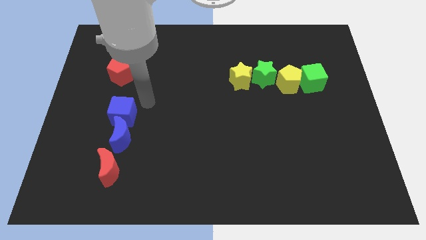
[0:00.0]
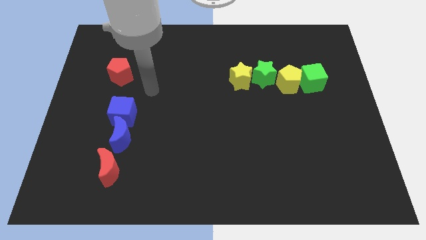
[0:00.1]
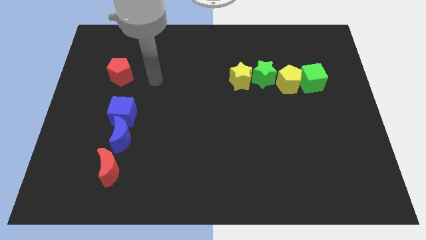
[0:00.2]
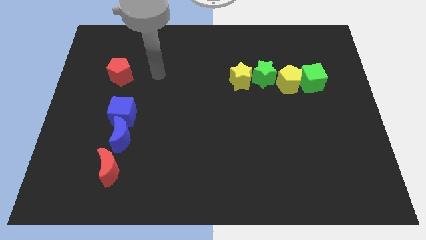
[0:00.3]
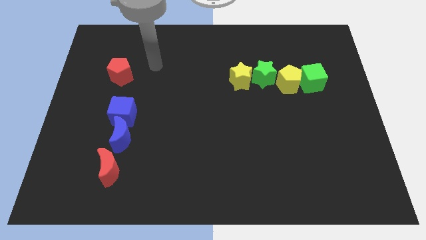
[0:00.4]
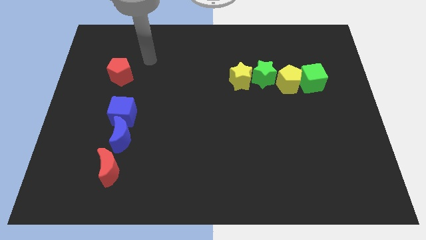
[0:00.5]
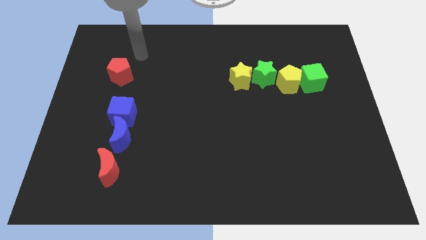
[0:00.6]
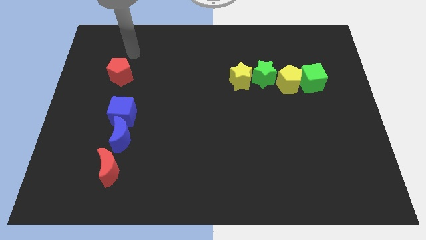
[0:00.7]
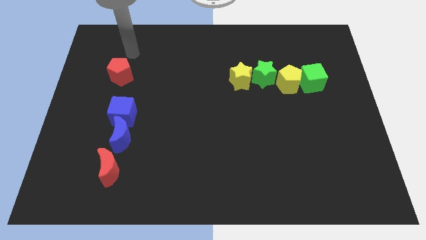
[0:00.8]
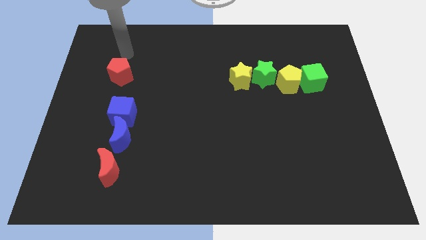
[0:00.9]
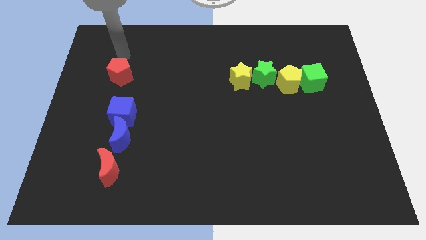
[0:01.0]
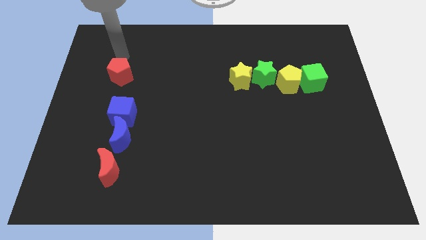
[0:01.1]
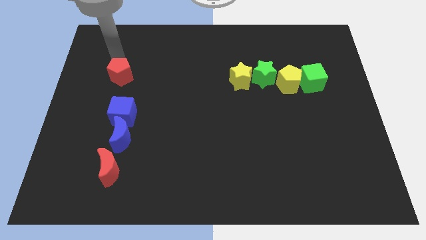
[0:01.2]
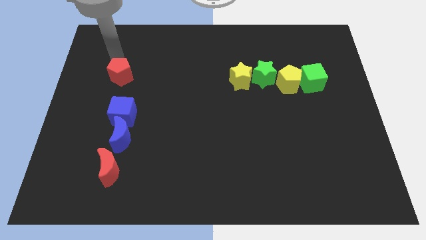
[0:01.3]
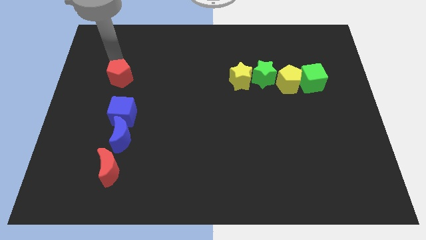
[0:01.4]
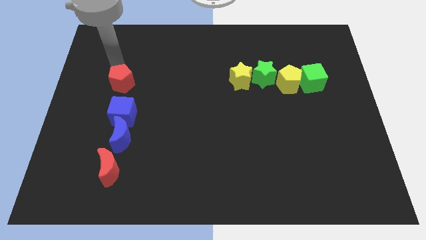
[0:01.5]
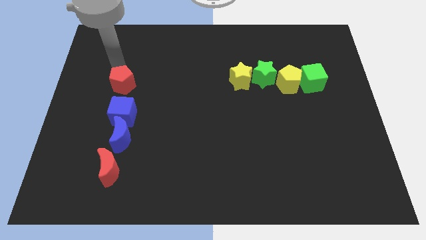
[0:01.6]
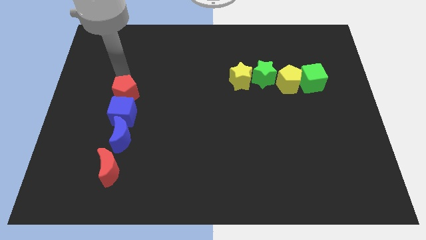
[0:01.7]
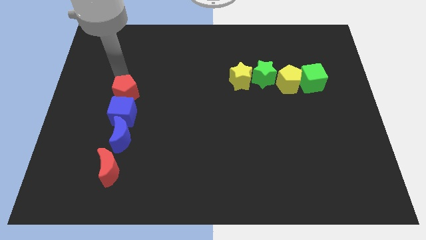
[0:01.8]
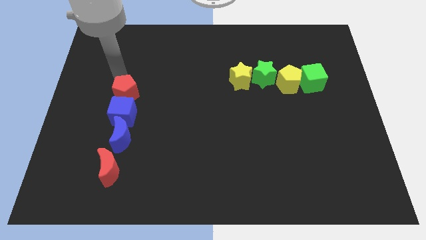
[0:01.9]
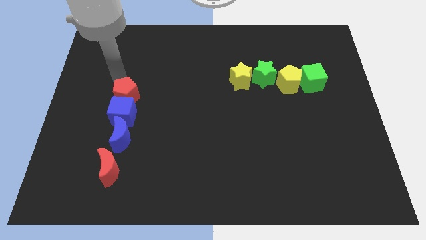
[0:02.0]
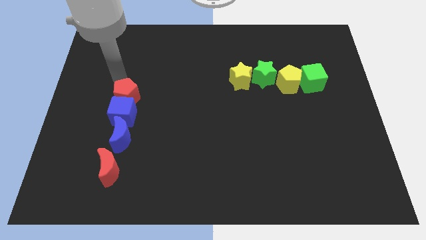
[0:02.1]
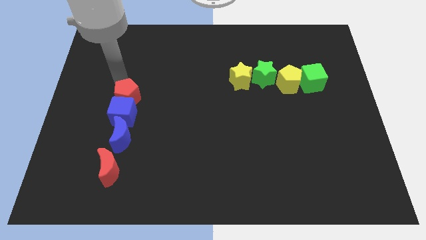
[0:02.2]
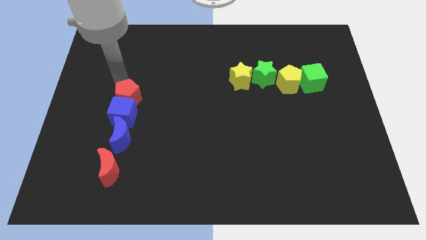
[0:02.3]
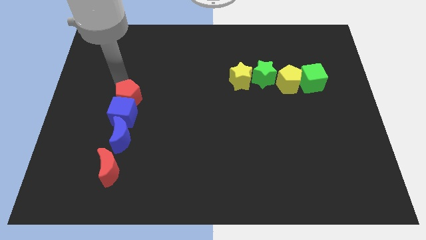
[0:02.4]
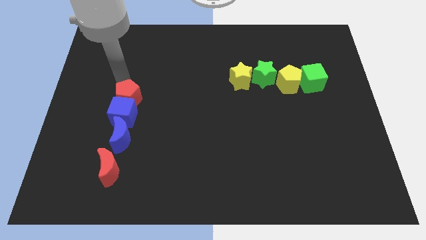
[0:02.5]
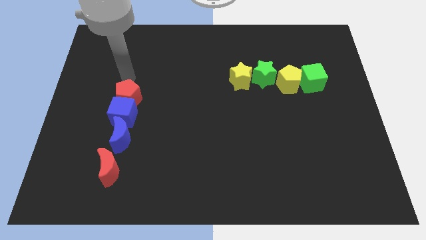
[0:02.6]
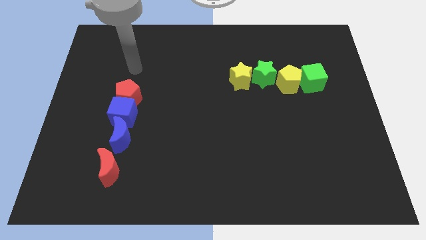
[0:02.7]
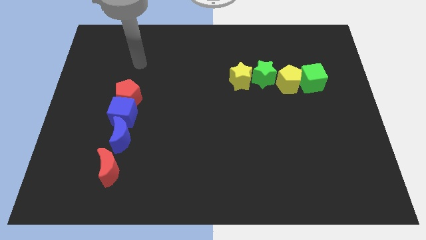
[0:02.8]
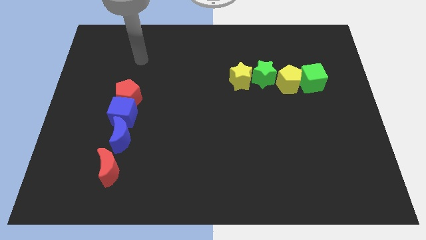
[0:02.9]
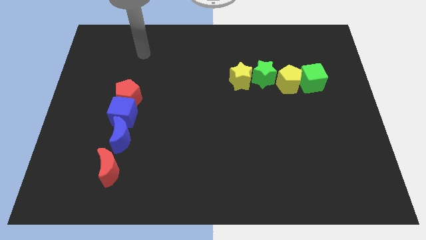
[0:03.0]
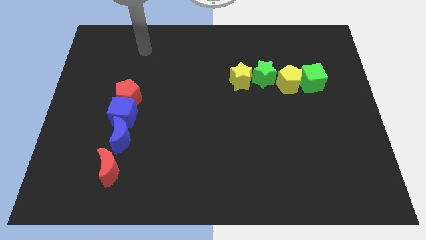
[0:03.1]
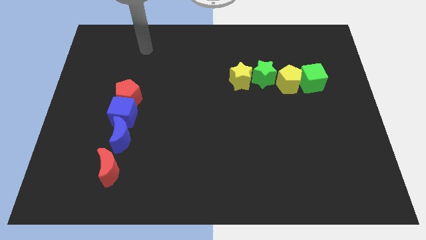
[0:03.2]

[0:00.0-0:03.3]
push red pentagon into the blue cube

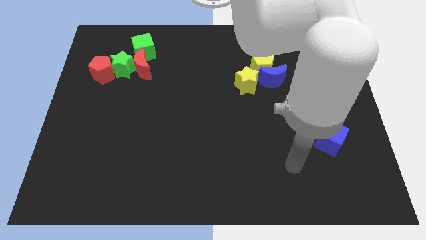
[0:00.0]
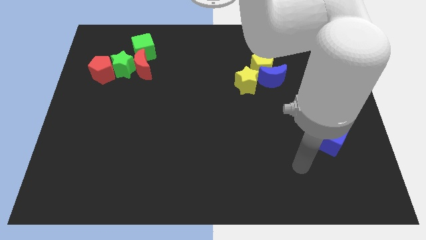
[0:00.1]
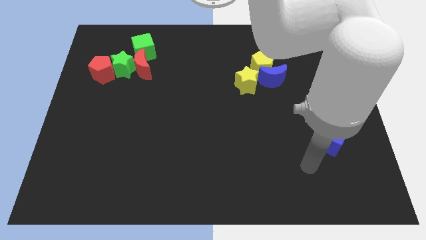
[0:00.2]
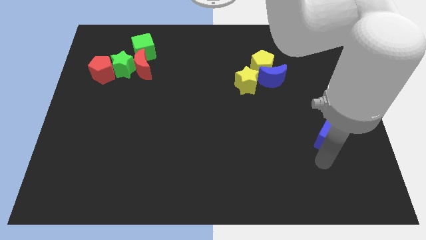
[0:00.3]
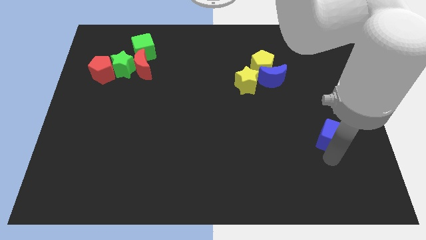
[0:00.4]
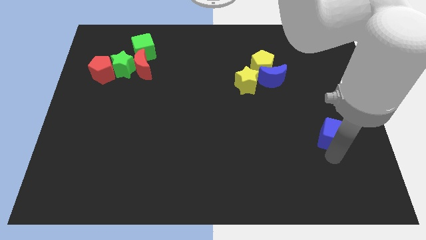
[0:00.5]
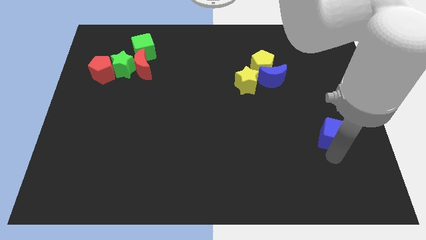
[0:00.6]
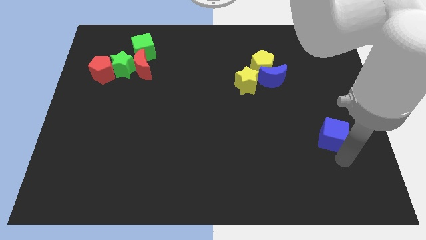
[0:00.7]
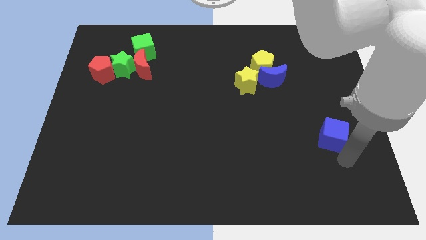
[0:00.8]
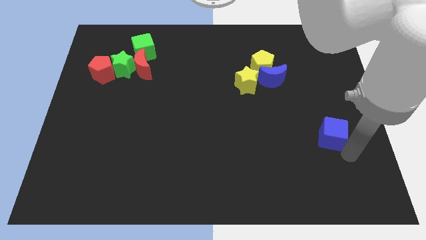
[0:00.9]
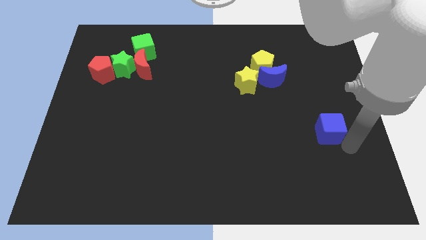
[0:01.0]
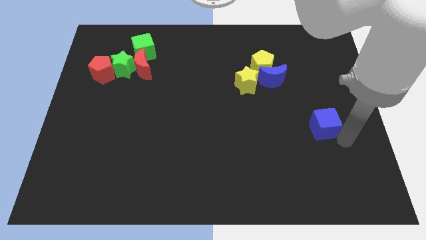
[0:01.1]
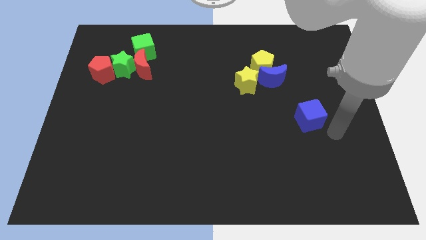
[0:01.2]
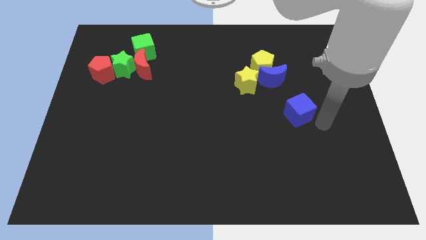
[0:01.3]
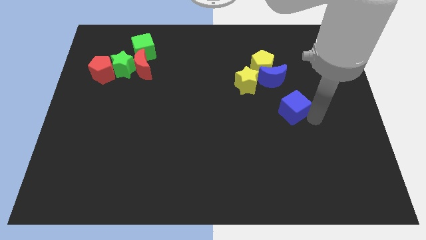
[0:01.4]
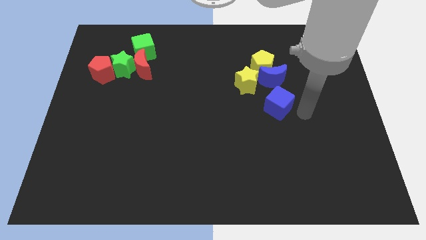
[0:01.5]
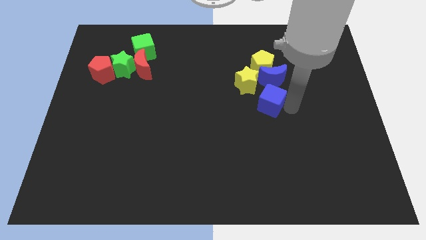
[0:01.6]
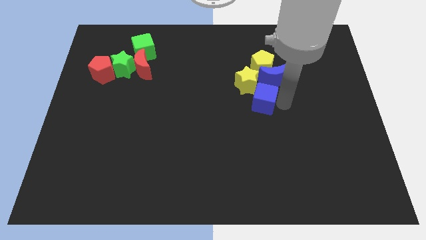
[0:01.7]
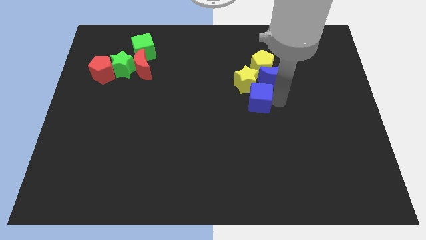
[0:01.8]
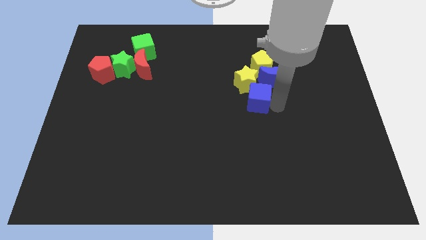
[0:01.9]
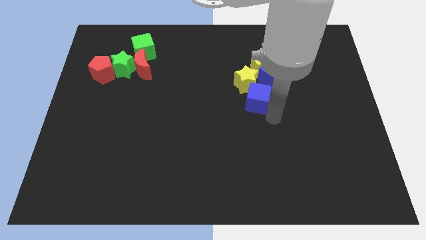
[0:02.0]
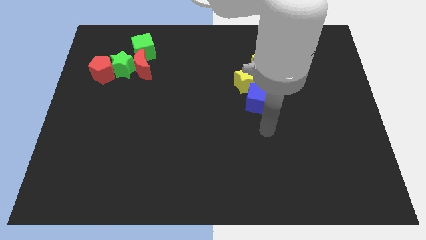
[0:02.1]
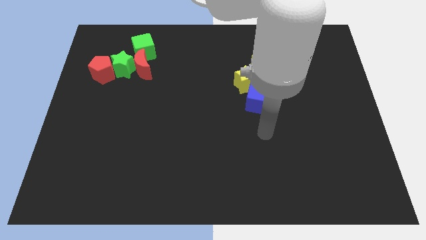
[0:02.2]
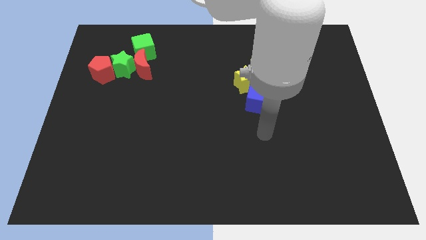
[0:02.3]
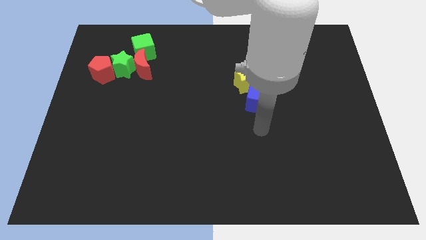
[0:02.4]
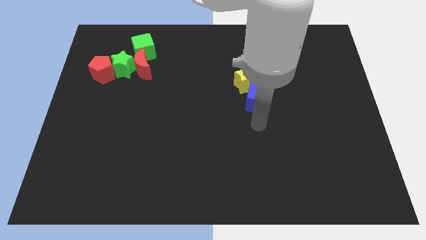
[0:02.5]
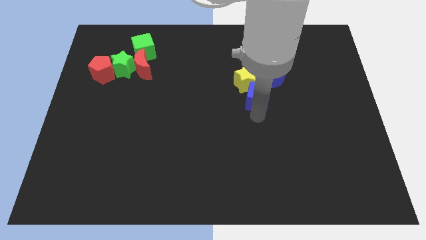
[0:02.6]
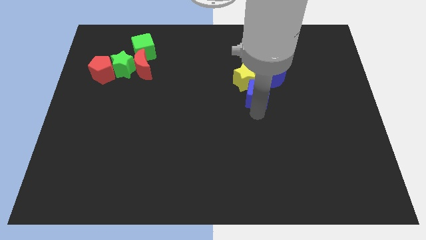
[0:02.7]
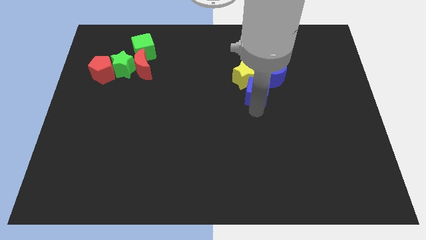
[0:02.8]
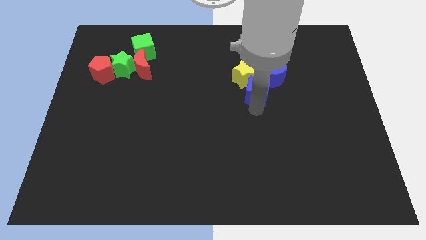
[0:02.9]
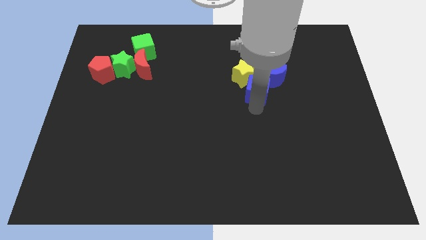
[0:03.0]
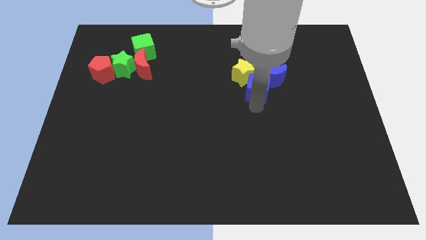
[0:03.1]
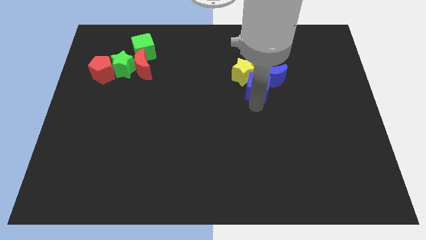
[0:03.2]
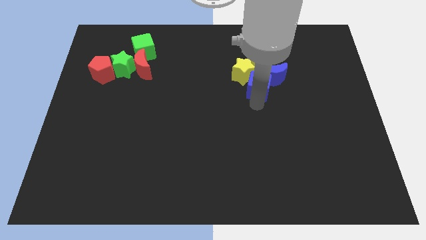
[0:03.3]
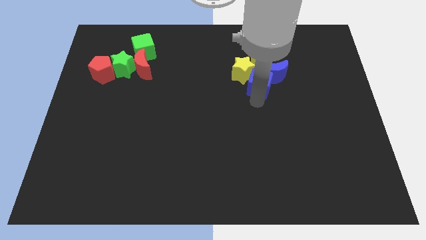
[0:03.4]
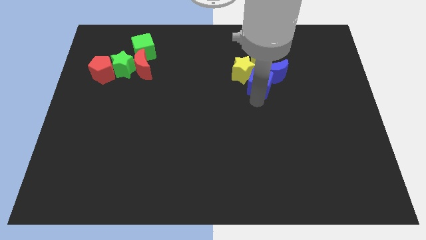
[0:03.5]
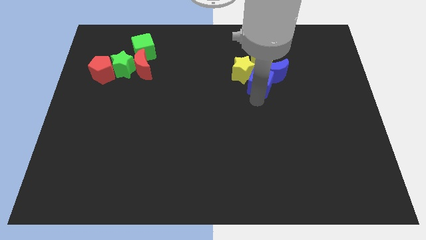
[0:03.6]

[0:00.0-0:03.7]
push the blue cube into yellow star

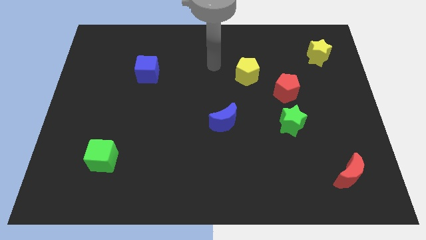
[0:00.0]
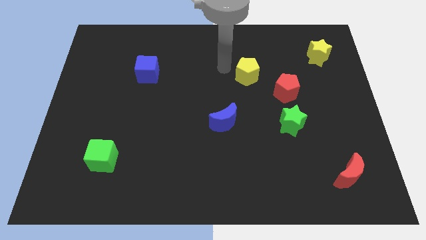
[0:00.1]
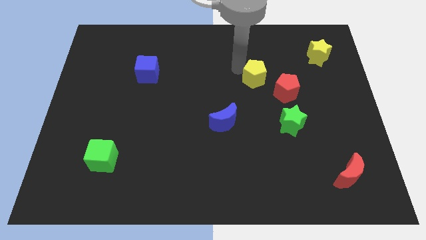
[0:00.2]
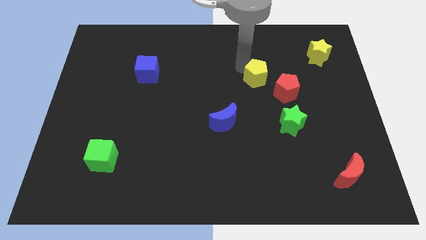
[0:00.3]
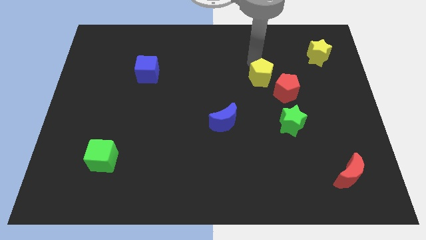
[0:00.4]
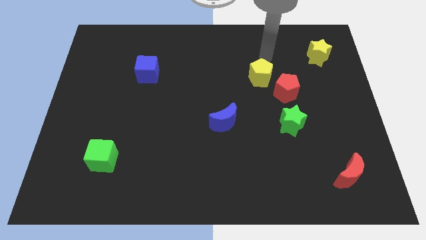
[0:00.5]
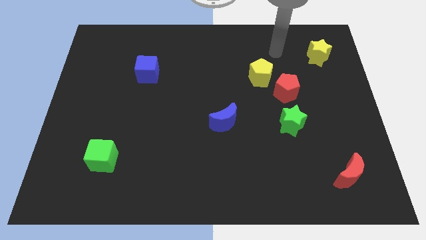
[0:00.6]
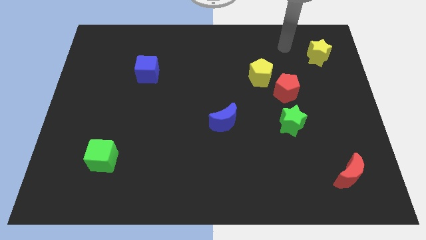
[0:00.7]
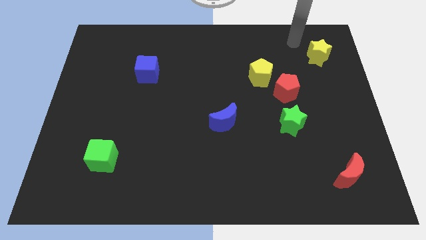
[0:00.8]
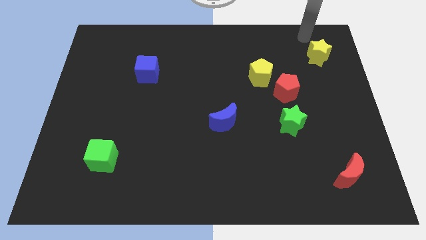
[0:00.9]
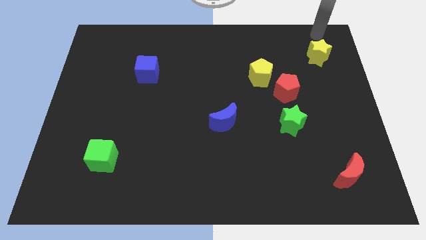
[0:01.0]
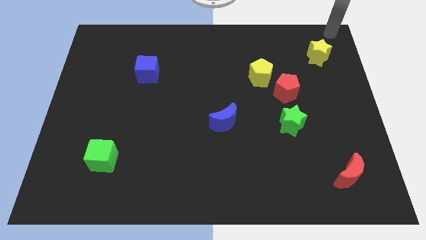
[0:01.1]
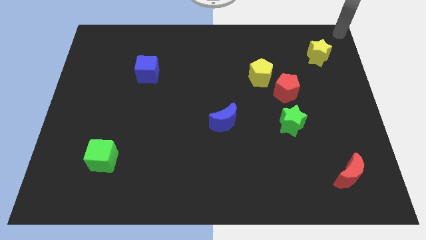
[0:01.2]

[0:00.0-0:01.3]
move the yellow pentagon slightly to the right

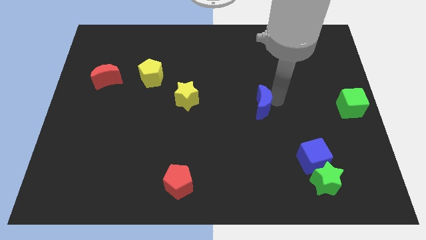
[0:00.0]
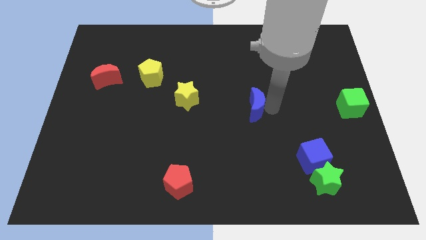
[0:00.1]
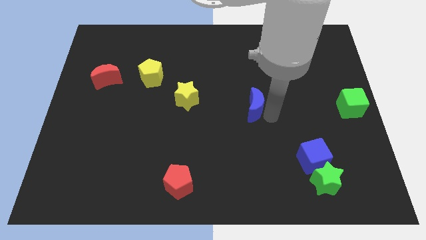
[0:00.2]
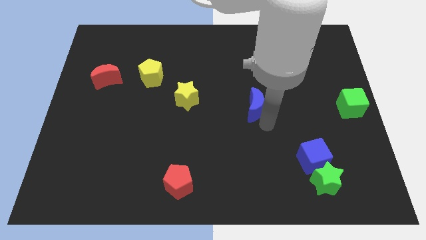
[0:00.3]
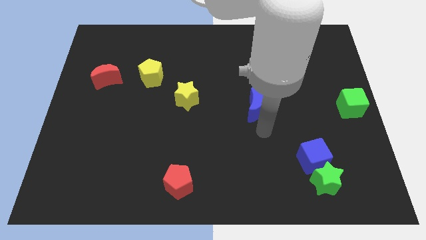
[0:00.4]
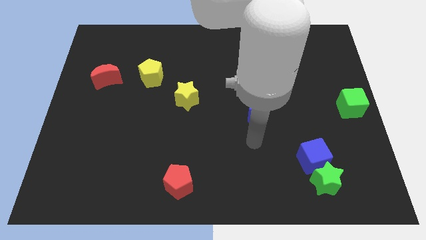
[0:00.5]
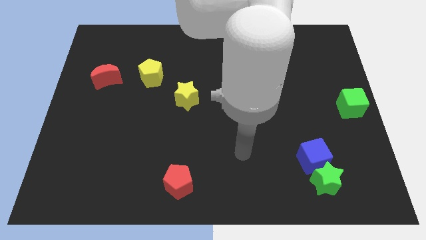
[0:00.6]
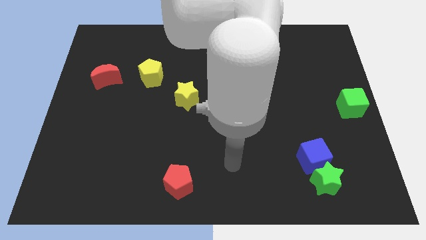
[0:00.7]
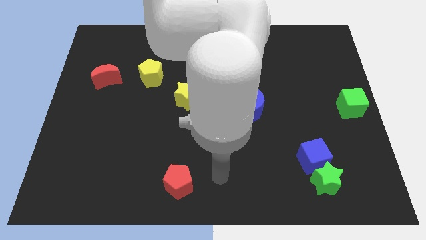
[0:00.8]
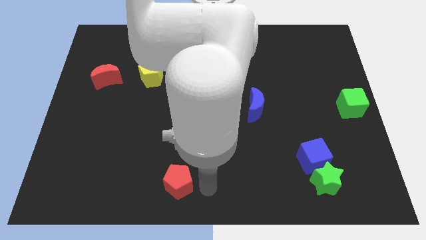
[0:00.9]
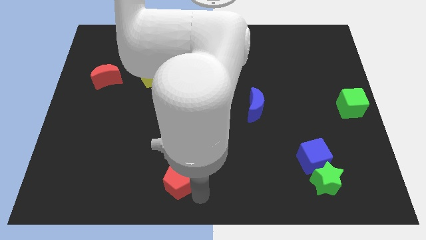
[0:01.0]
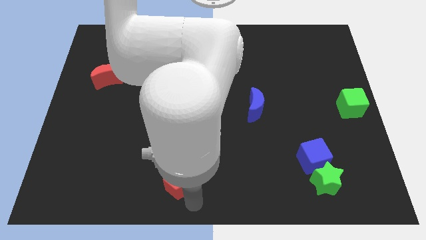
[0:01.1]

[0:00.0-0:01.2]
place your arm to the bottom right side of the red pentagon
